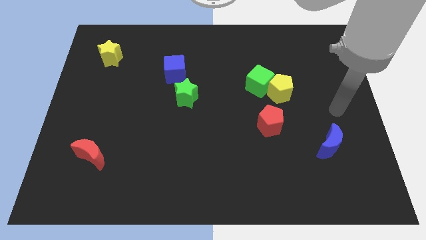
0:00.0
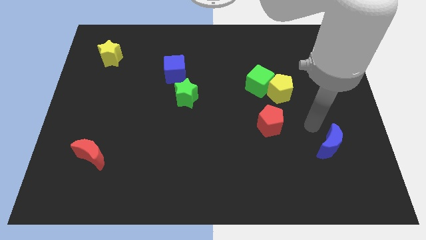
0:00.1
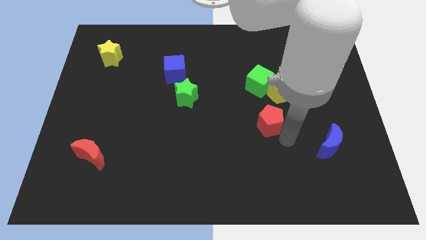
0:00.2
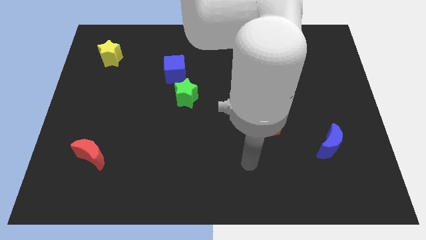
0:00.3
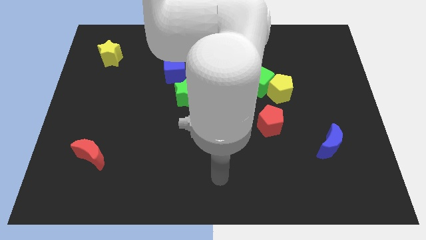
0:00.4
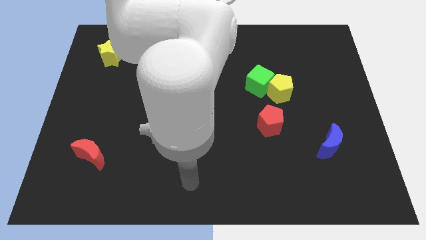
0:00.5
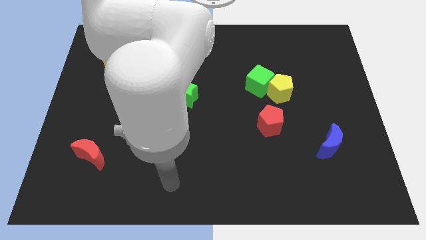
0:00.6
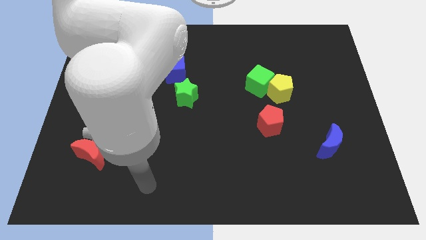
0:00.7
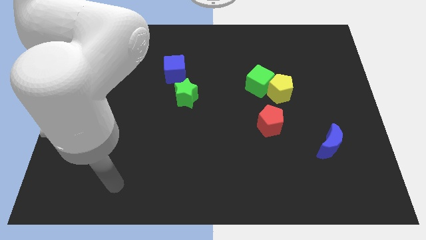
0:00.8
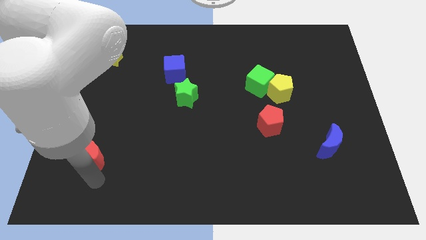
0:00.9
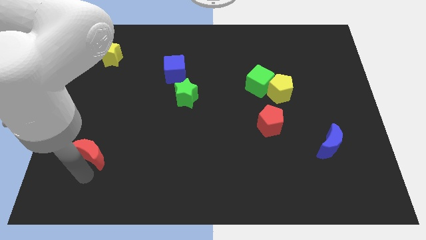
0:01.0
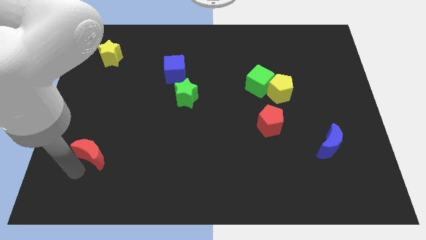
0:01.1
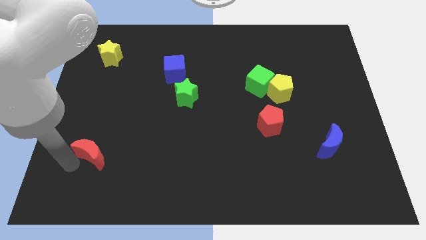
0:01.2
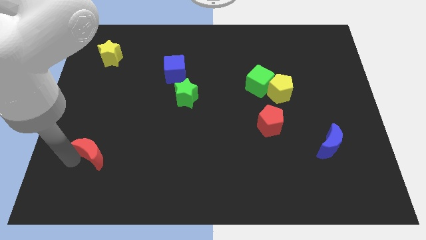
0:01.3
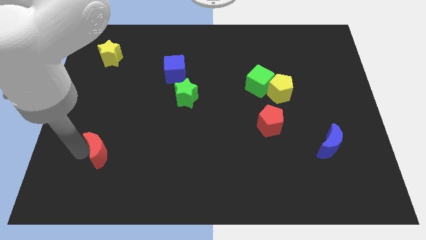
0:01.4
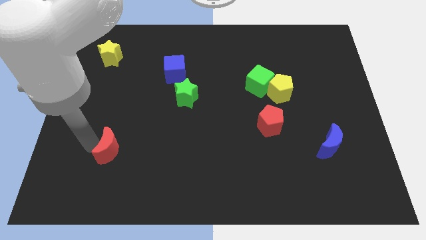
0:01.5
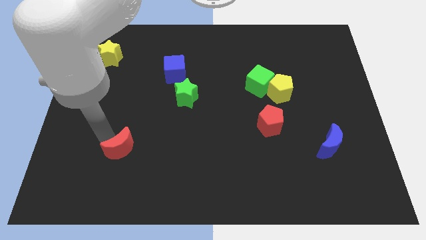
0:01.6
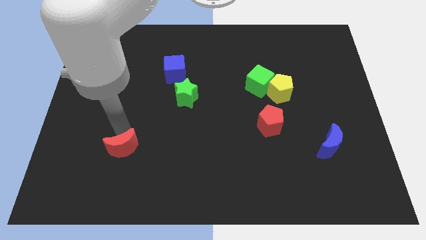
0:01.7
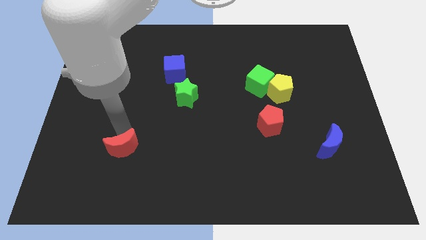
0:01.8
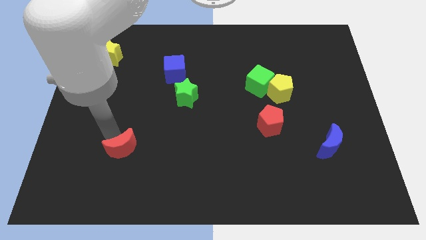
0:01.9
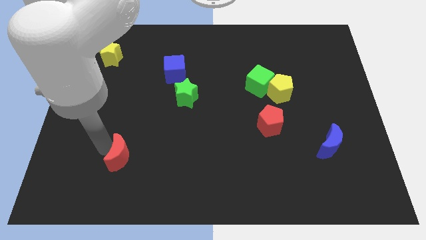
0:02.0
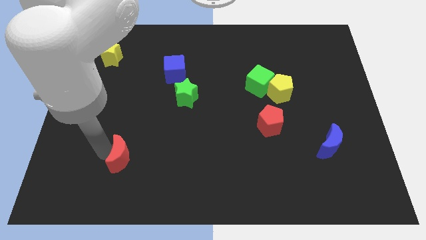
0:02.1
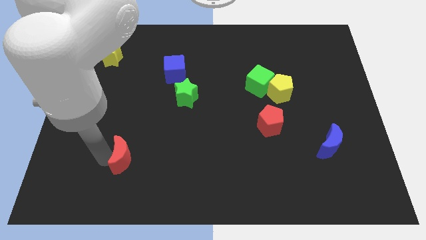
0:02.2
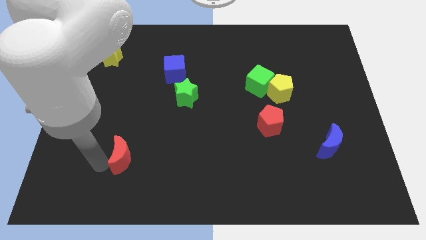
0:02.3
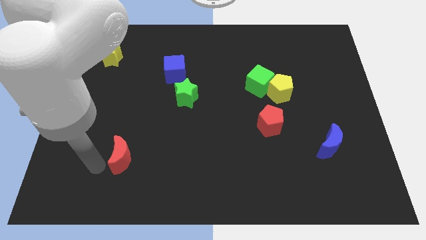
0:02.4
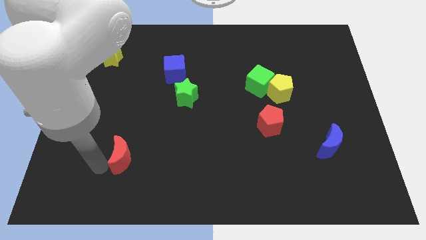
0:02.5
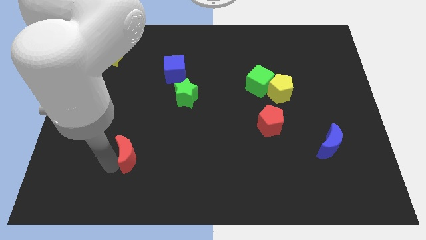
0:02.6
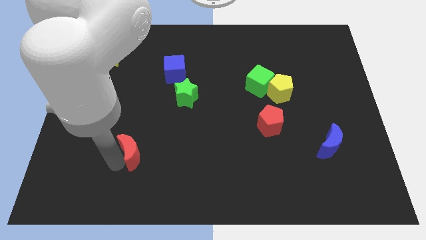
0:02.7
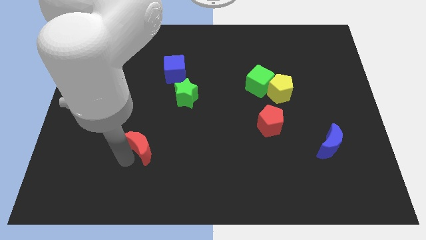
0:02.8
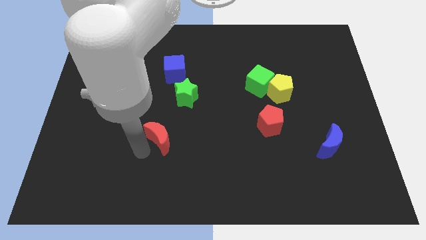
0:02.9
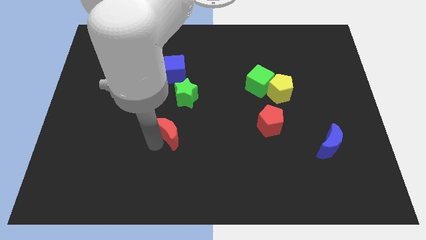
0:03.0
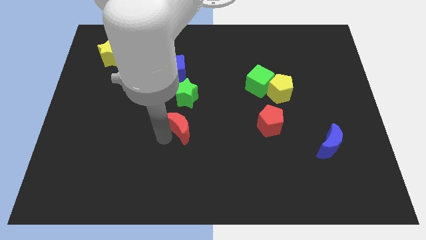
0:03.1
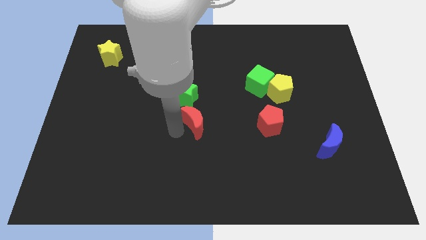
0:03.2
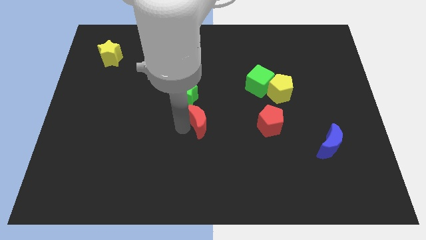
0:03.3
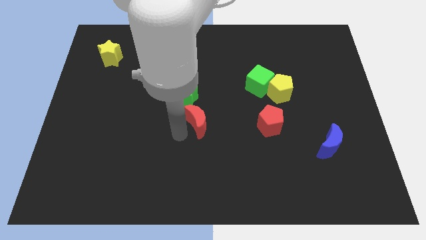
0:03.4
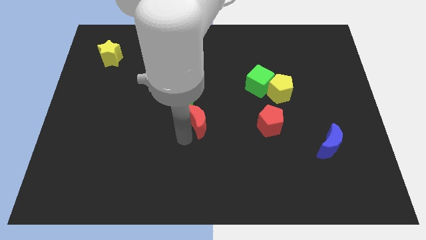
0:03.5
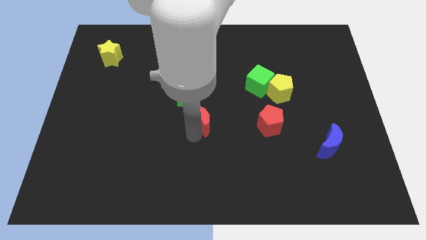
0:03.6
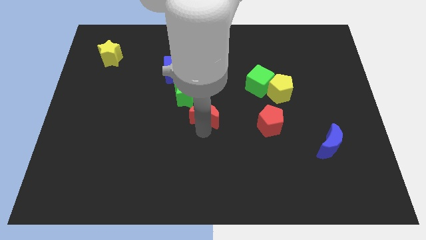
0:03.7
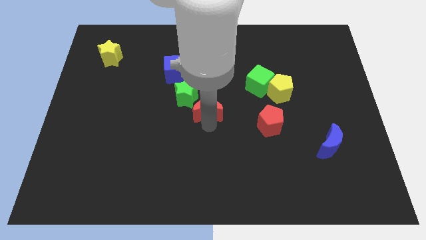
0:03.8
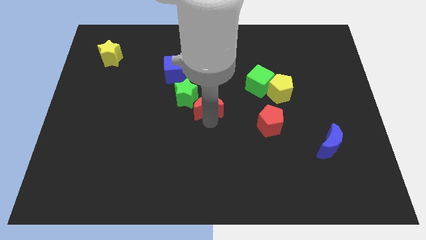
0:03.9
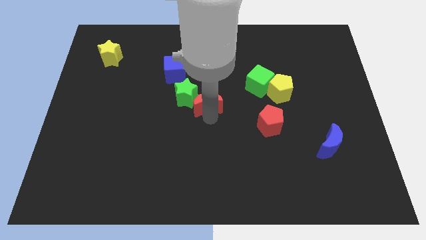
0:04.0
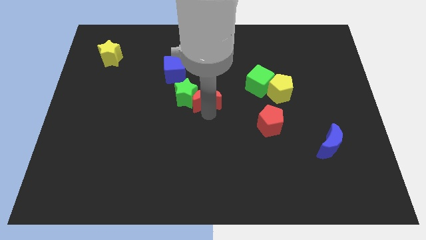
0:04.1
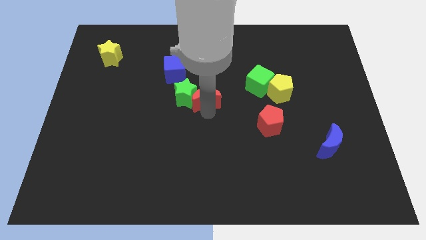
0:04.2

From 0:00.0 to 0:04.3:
push the red moon next to the green star

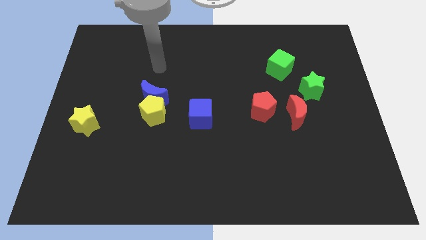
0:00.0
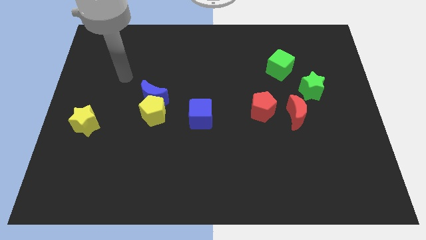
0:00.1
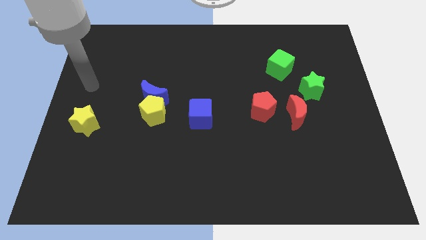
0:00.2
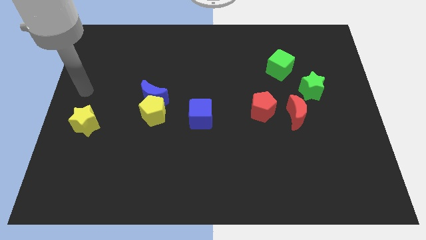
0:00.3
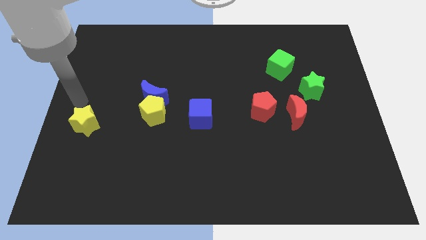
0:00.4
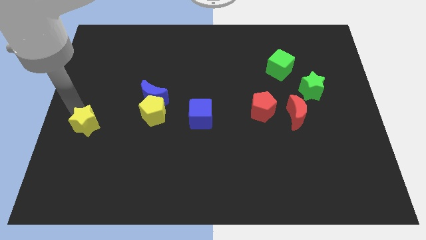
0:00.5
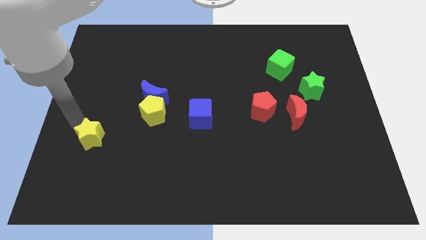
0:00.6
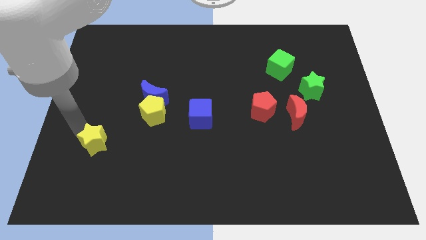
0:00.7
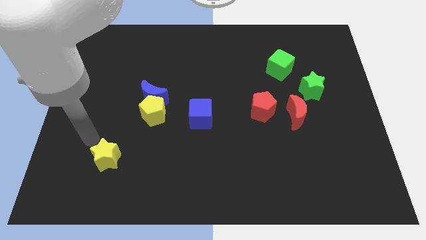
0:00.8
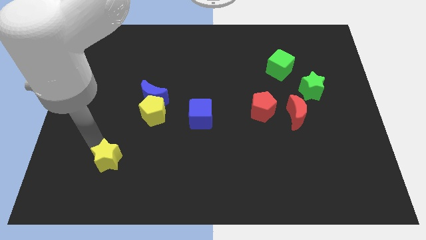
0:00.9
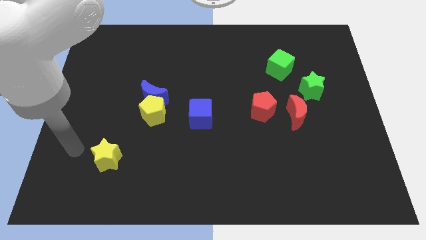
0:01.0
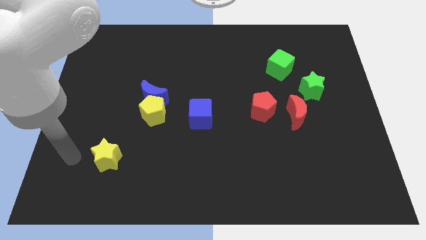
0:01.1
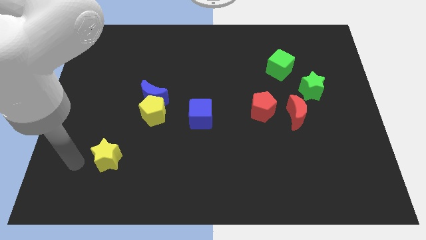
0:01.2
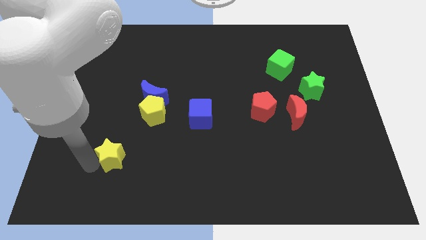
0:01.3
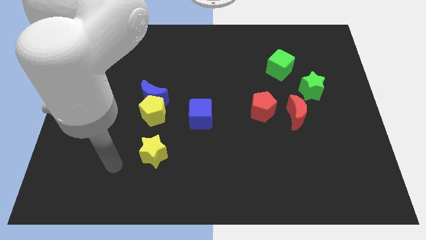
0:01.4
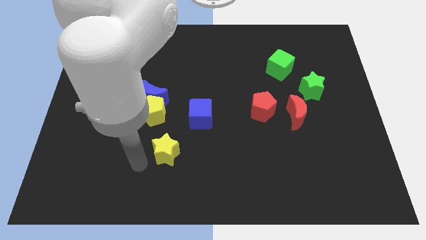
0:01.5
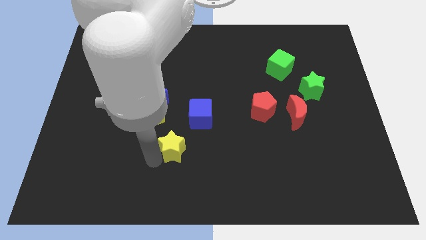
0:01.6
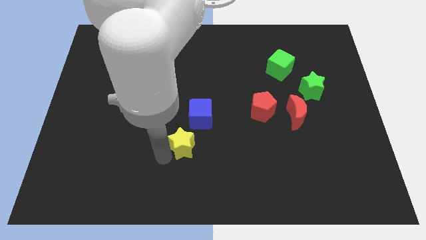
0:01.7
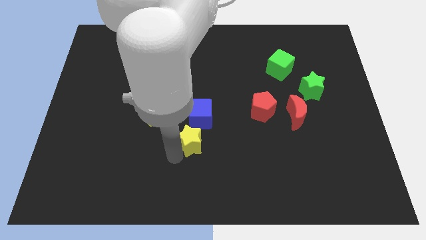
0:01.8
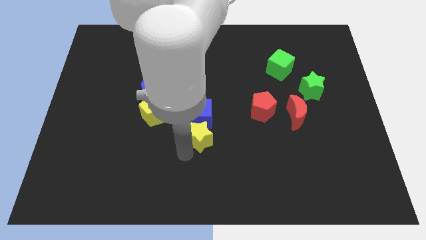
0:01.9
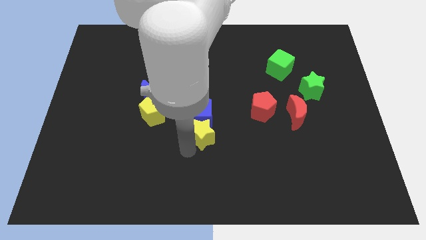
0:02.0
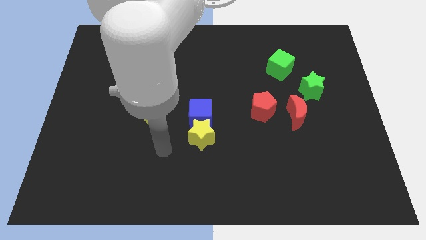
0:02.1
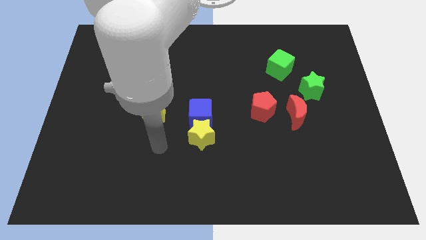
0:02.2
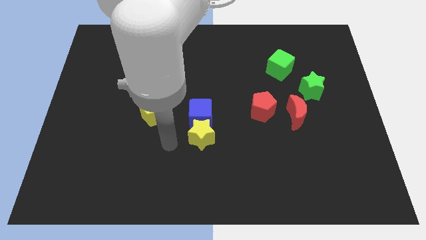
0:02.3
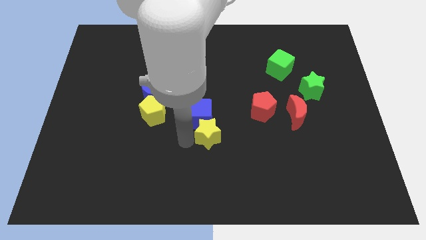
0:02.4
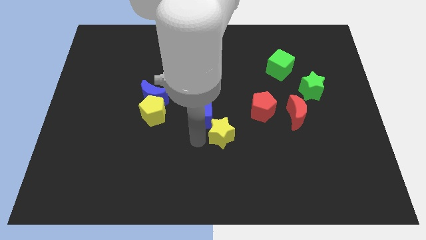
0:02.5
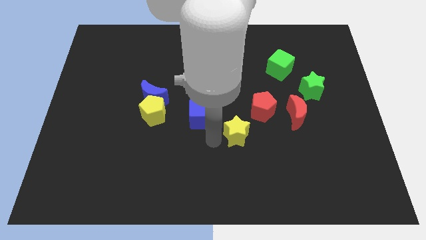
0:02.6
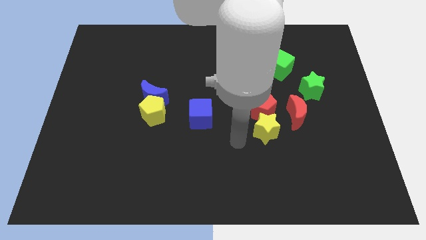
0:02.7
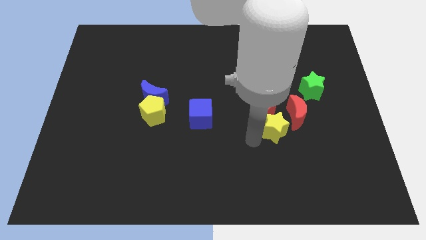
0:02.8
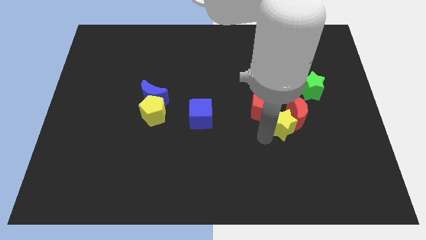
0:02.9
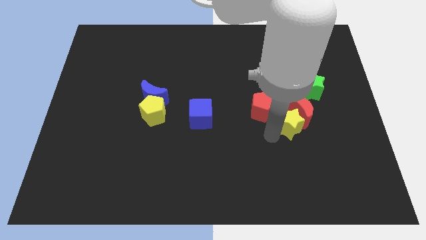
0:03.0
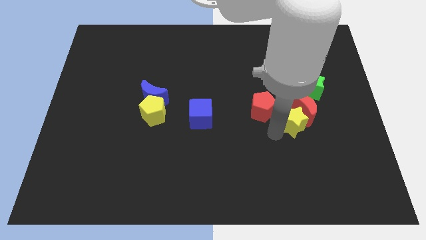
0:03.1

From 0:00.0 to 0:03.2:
move the yellow star close to the red moon

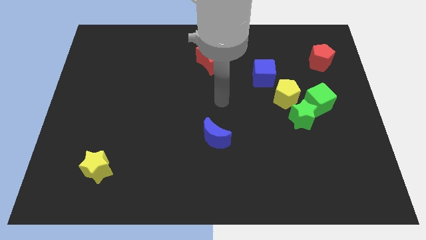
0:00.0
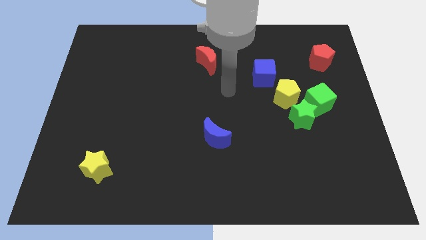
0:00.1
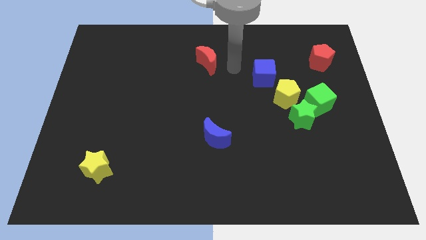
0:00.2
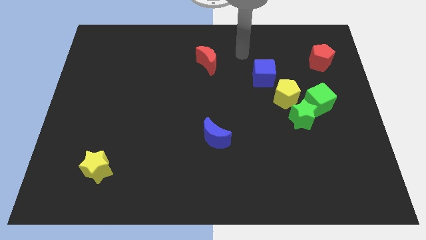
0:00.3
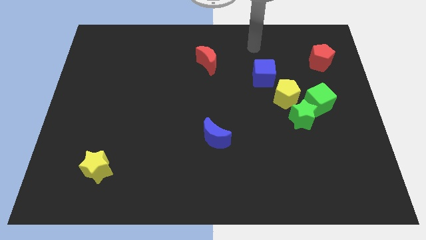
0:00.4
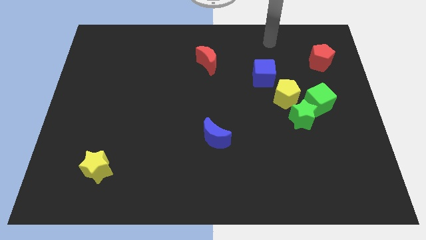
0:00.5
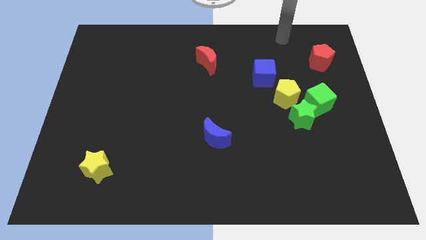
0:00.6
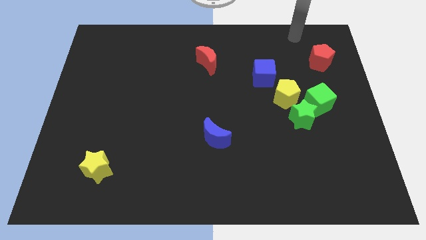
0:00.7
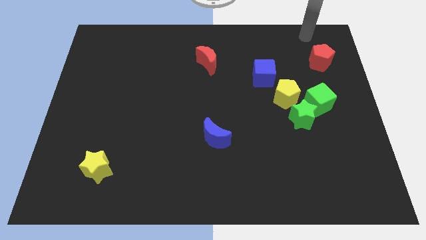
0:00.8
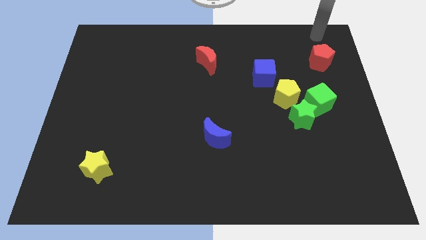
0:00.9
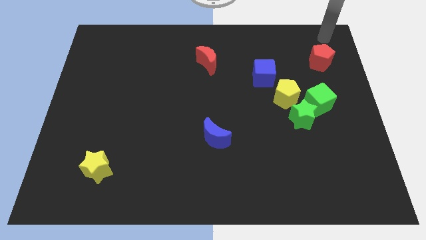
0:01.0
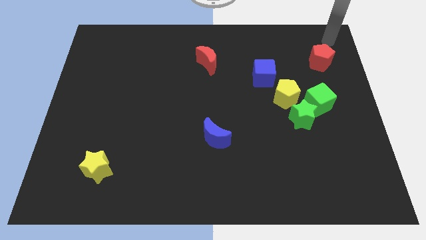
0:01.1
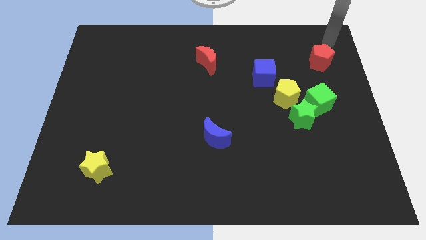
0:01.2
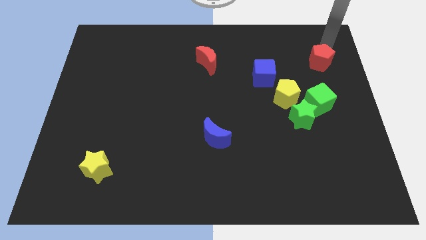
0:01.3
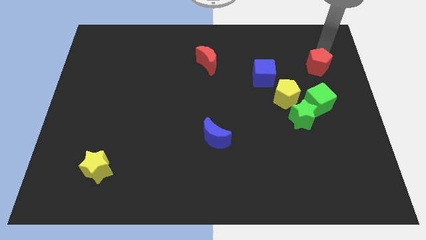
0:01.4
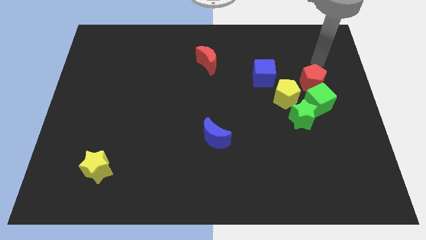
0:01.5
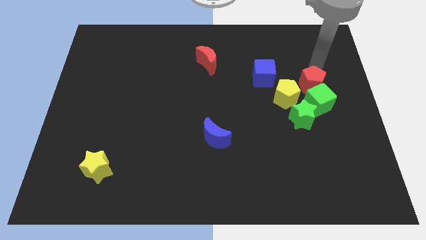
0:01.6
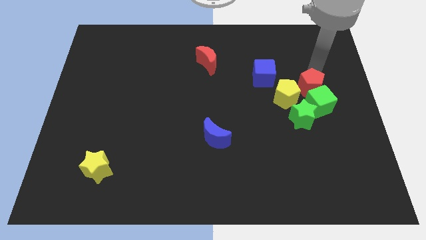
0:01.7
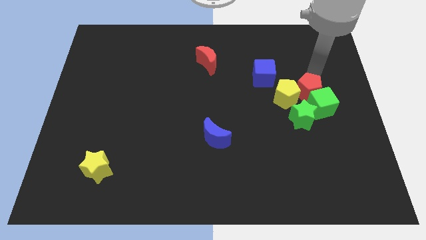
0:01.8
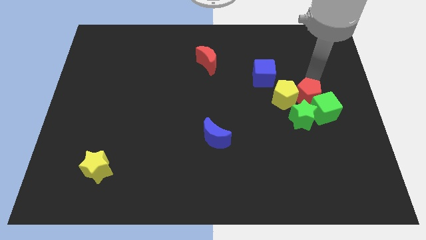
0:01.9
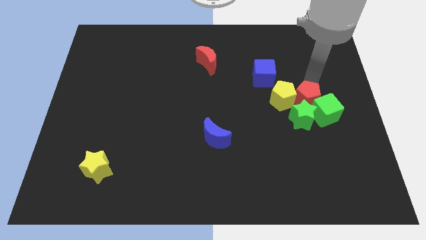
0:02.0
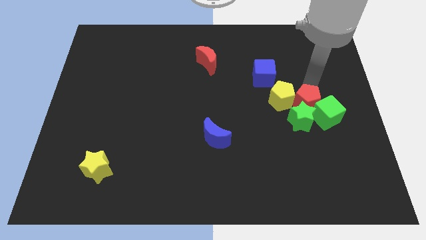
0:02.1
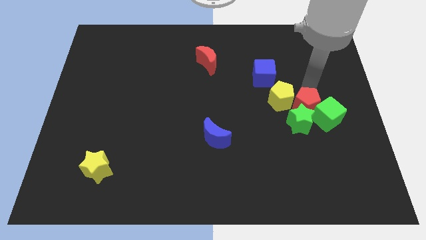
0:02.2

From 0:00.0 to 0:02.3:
move the red pentagon towards the green star
